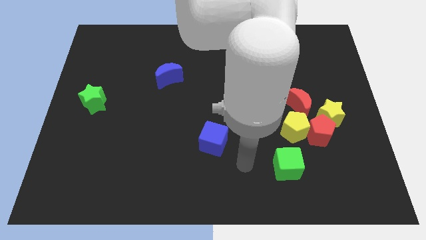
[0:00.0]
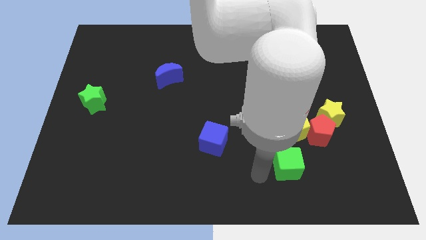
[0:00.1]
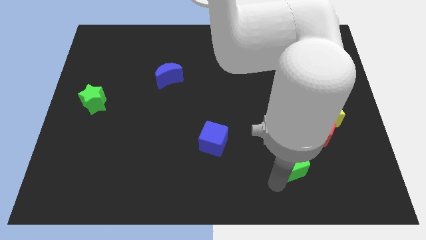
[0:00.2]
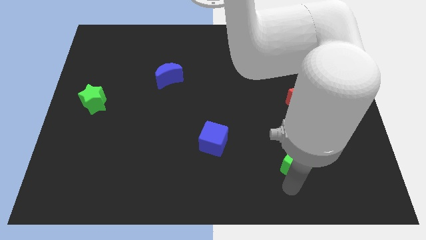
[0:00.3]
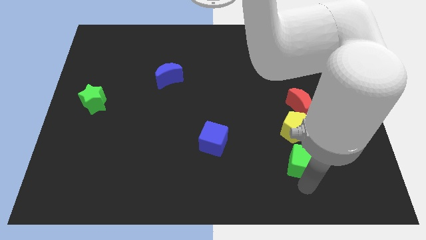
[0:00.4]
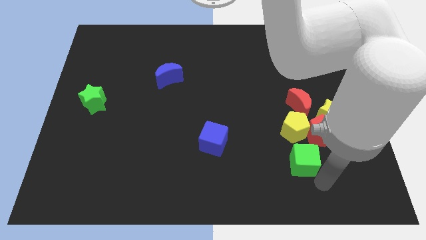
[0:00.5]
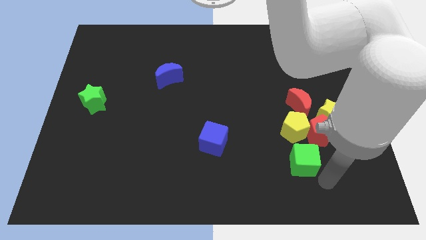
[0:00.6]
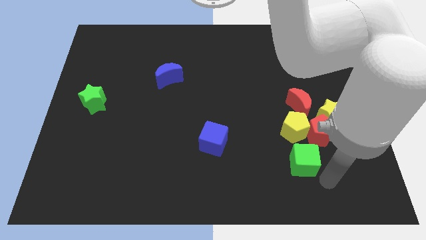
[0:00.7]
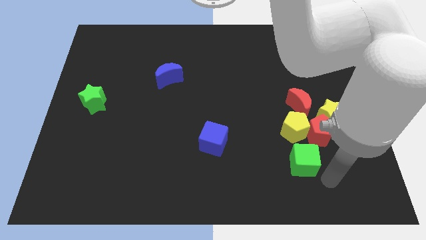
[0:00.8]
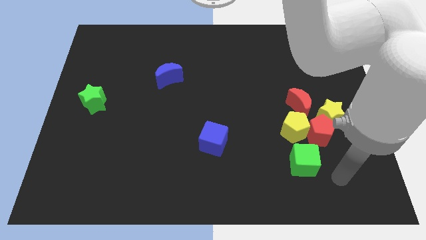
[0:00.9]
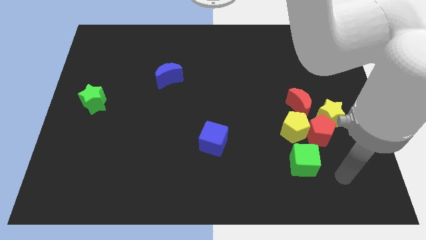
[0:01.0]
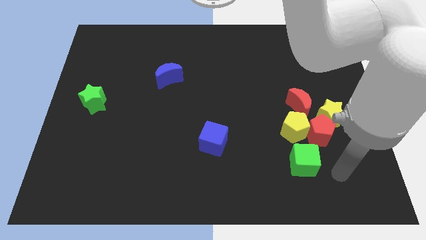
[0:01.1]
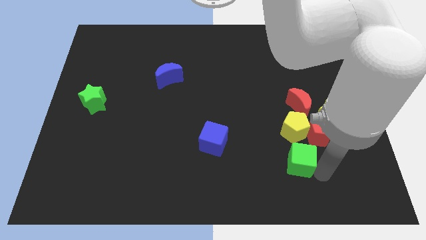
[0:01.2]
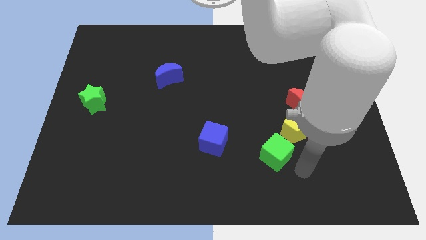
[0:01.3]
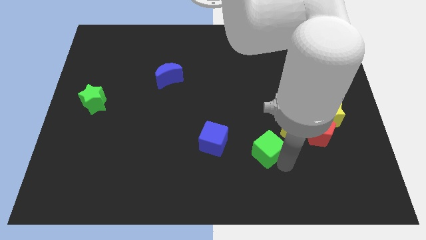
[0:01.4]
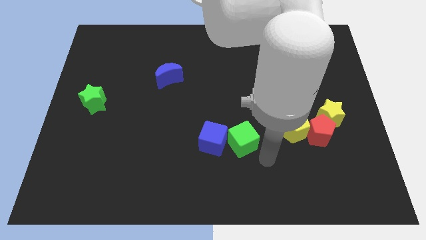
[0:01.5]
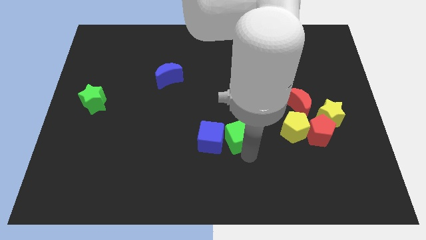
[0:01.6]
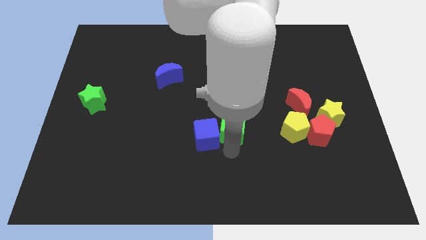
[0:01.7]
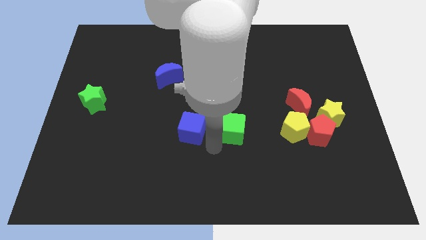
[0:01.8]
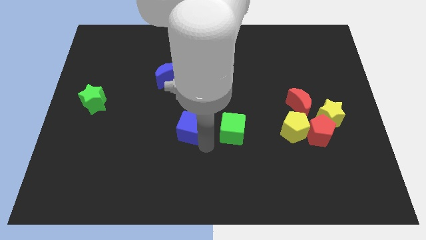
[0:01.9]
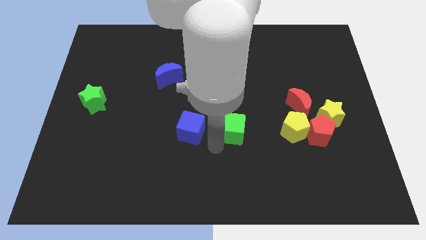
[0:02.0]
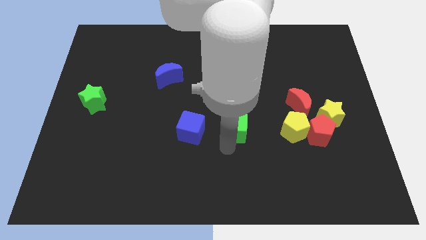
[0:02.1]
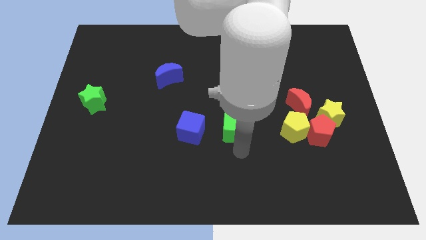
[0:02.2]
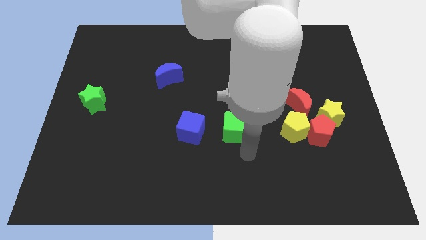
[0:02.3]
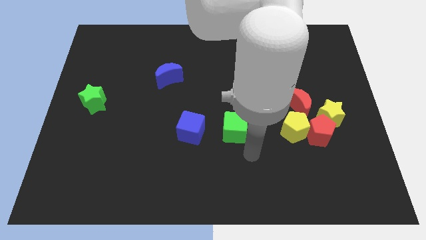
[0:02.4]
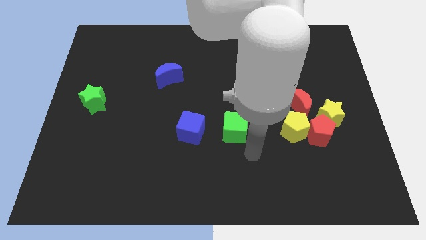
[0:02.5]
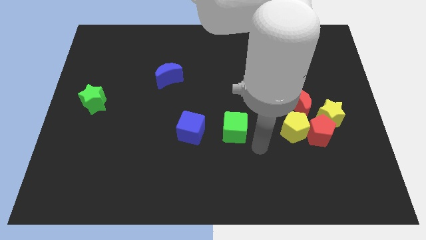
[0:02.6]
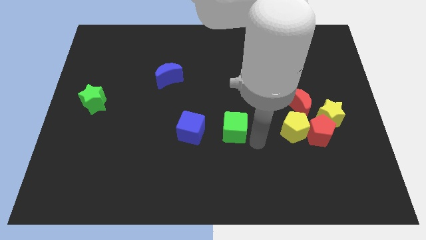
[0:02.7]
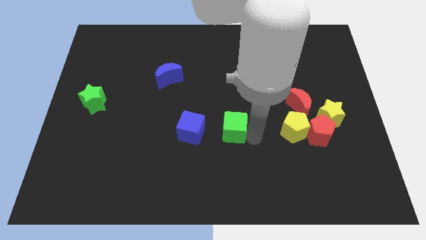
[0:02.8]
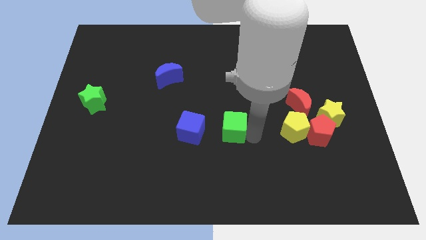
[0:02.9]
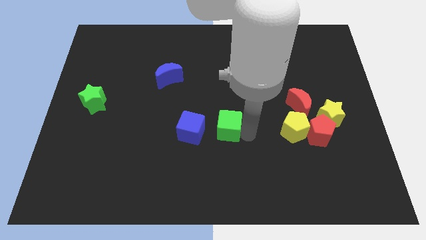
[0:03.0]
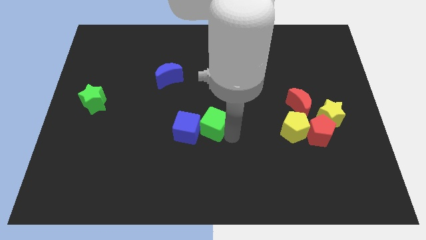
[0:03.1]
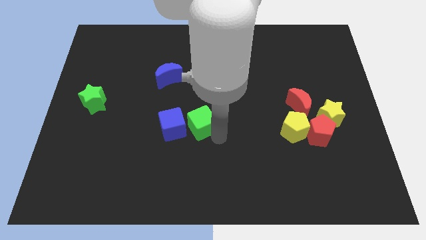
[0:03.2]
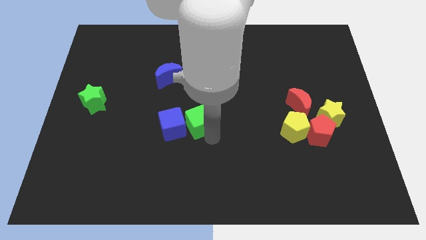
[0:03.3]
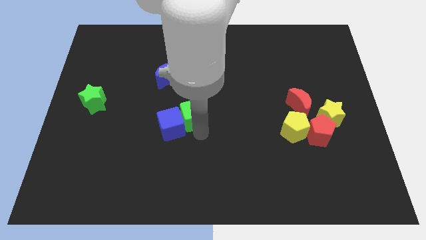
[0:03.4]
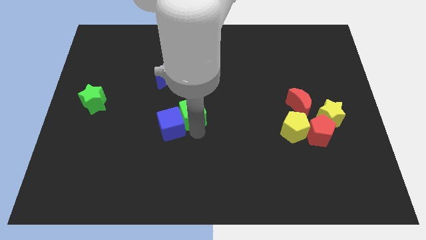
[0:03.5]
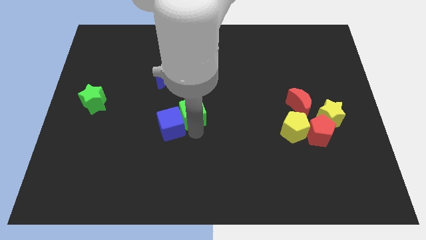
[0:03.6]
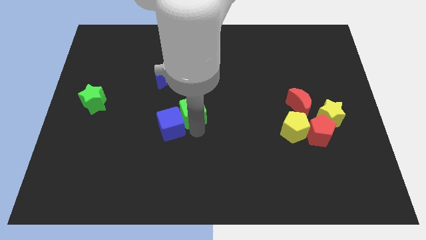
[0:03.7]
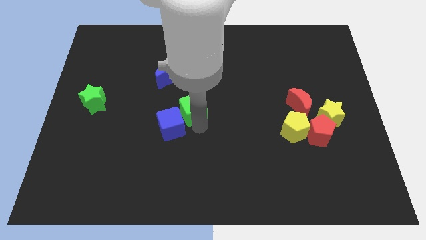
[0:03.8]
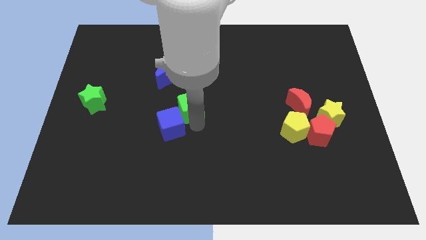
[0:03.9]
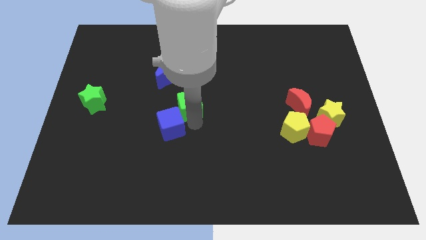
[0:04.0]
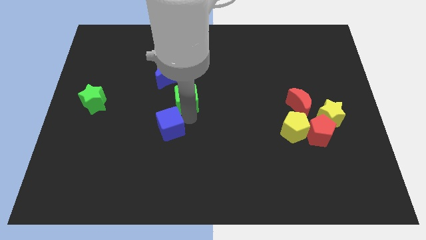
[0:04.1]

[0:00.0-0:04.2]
move the green cube at the top right side of the blue cube

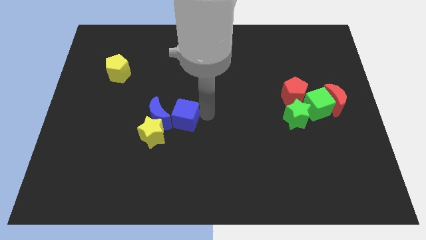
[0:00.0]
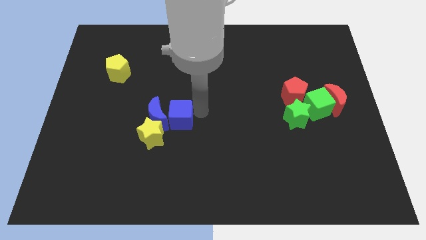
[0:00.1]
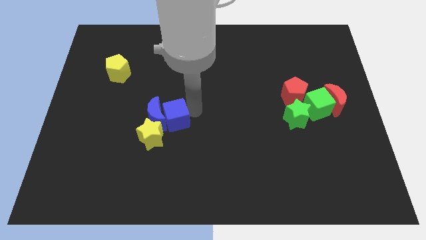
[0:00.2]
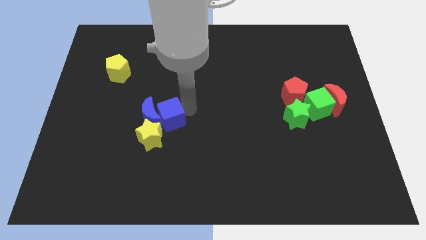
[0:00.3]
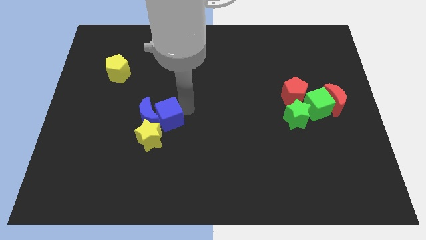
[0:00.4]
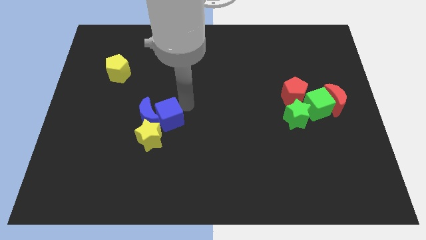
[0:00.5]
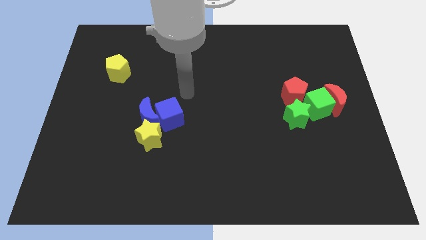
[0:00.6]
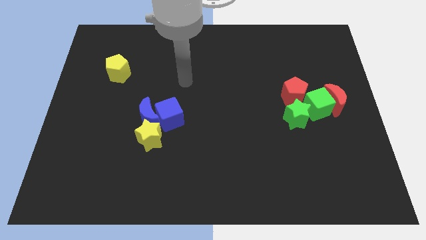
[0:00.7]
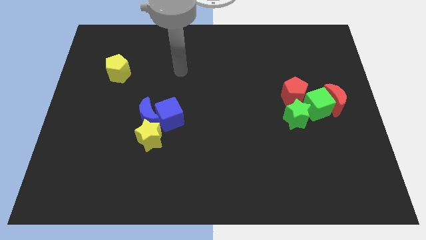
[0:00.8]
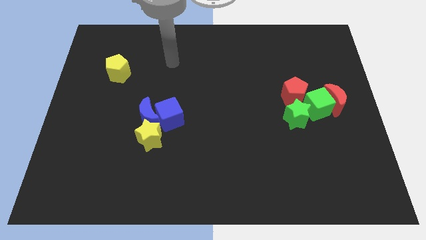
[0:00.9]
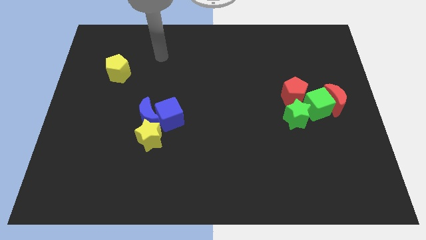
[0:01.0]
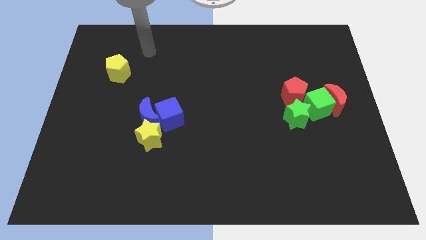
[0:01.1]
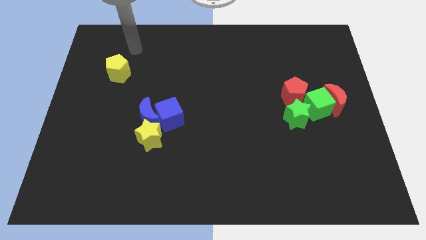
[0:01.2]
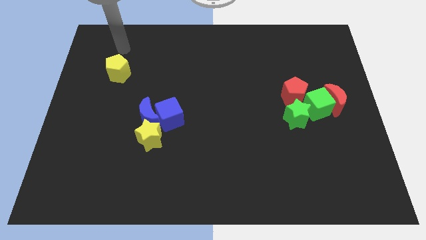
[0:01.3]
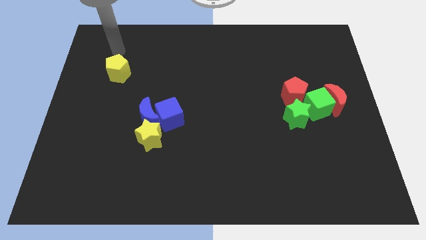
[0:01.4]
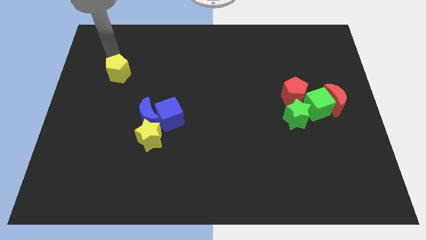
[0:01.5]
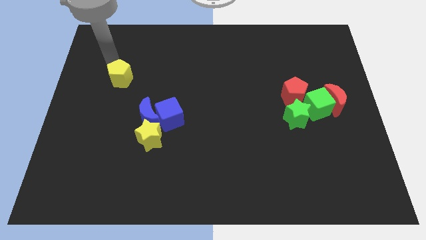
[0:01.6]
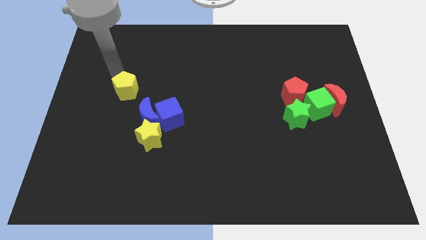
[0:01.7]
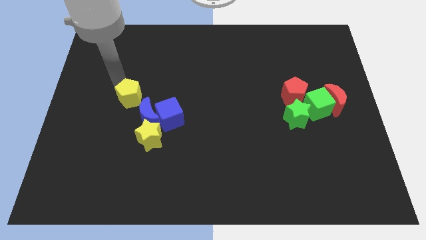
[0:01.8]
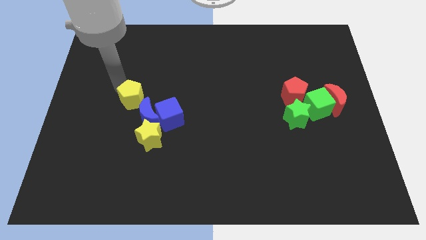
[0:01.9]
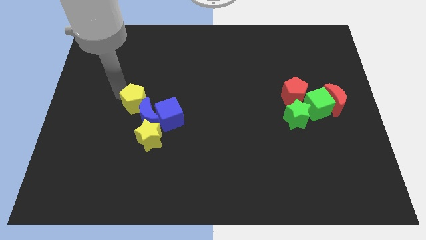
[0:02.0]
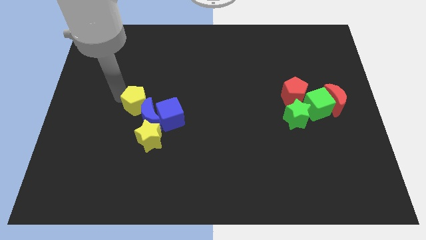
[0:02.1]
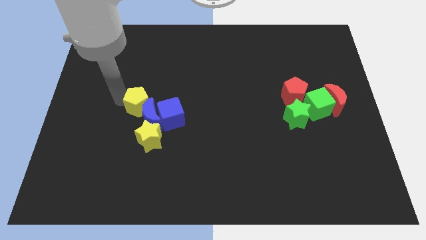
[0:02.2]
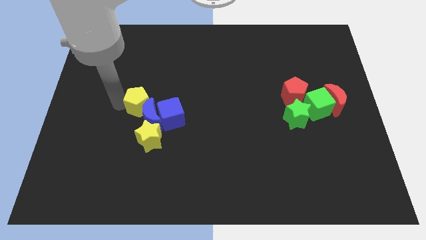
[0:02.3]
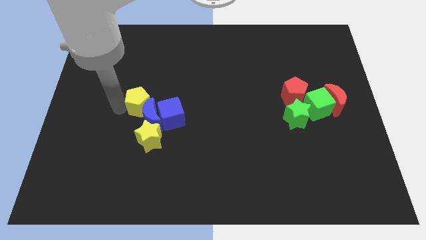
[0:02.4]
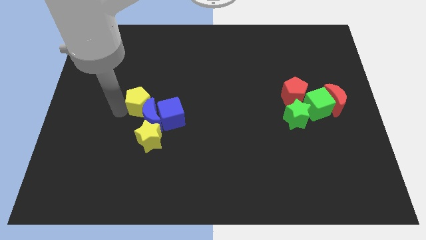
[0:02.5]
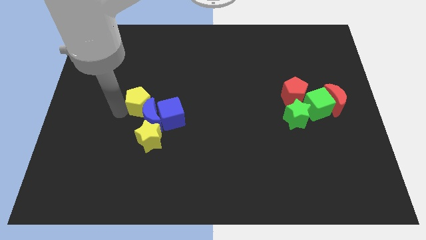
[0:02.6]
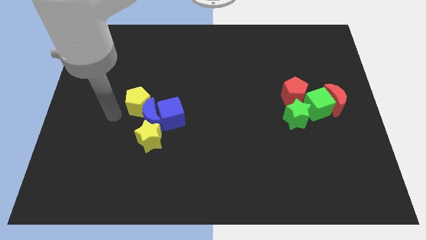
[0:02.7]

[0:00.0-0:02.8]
push yellow pentagon above blue crescent

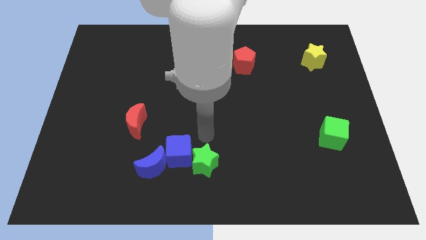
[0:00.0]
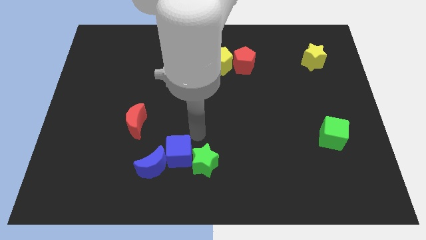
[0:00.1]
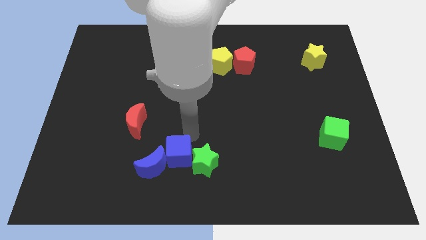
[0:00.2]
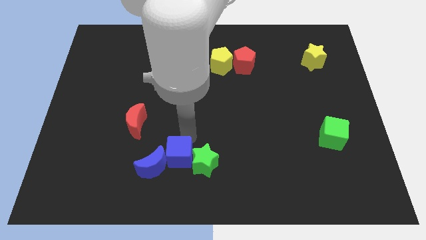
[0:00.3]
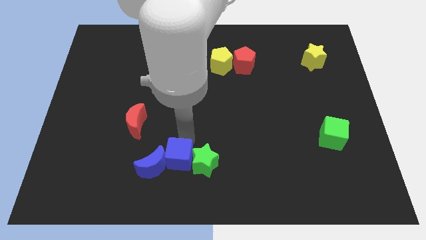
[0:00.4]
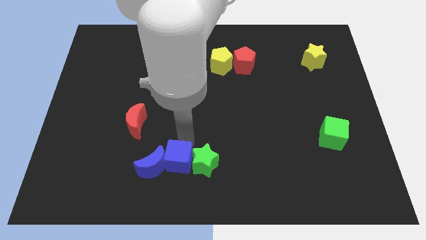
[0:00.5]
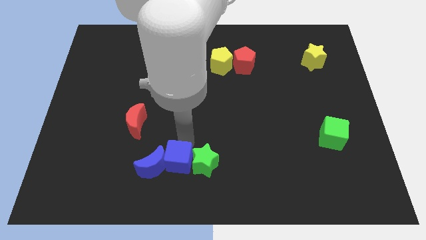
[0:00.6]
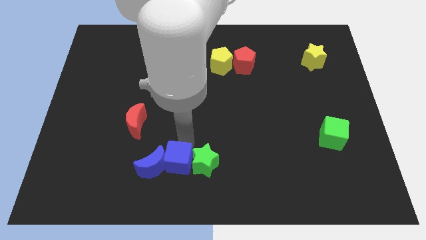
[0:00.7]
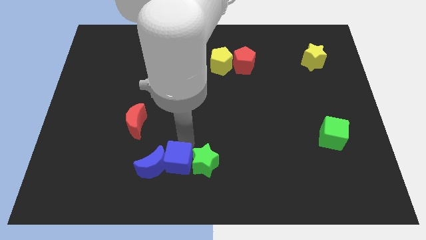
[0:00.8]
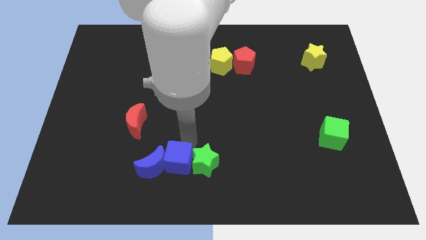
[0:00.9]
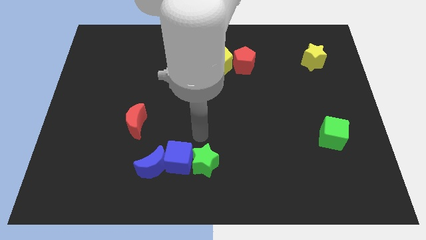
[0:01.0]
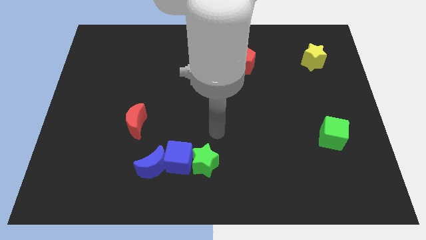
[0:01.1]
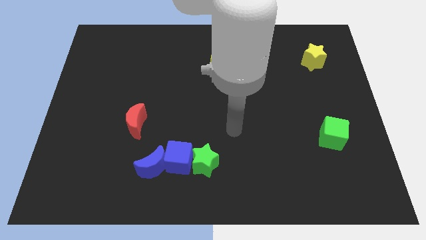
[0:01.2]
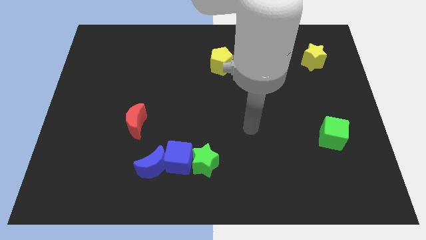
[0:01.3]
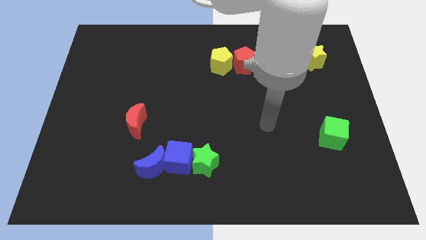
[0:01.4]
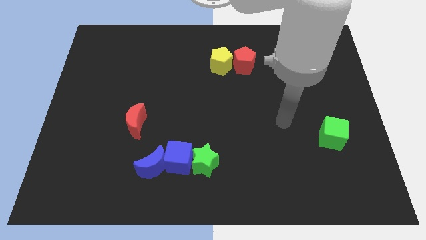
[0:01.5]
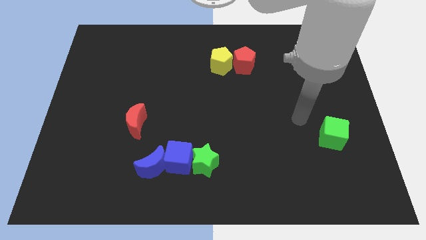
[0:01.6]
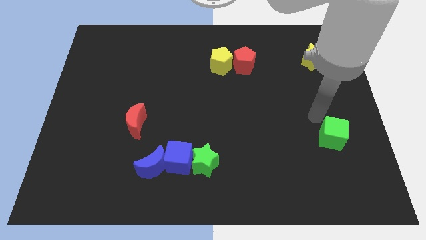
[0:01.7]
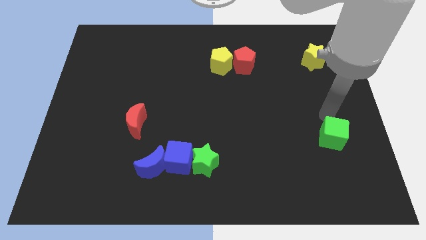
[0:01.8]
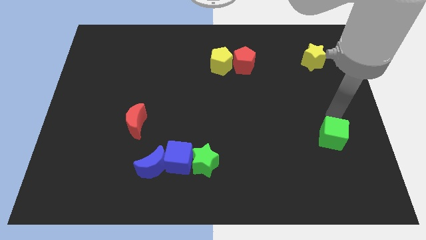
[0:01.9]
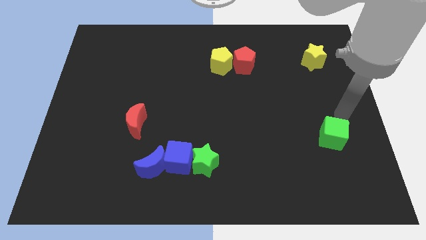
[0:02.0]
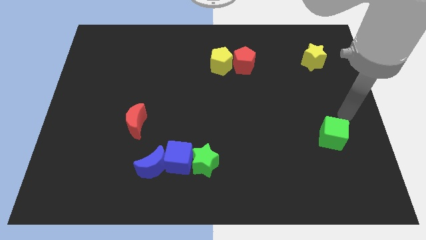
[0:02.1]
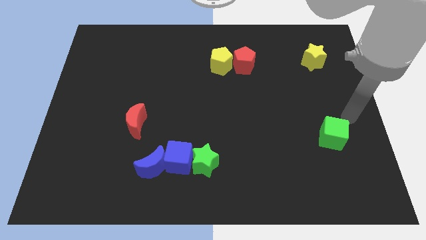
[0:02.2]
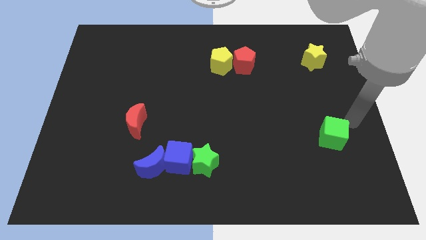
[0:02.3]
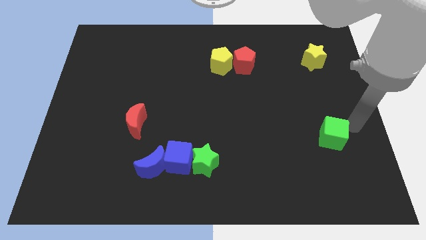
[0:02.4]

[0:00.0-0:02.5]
move your arm above the green cube
